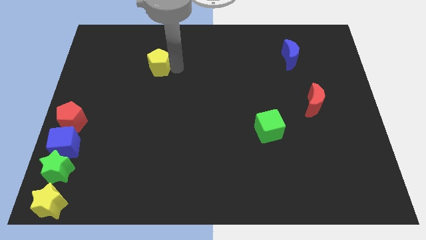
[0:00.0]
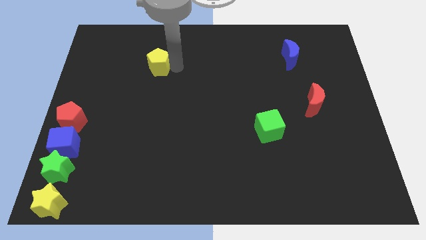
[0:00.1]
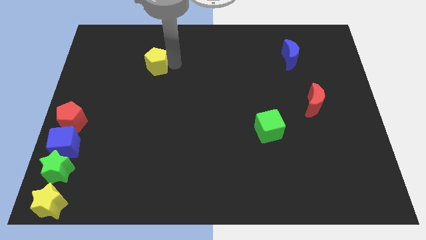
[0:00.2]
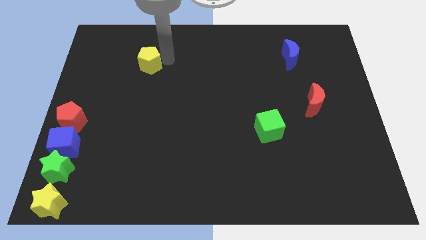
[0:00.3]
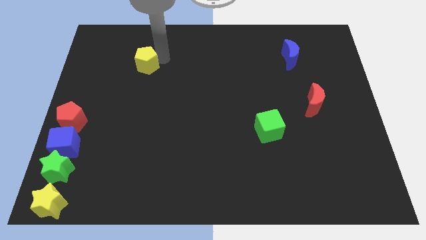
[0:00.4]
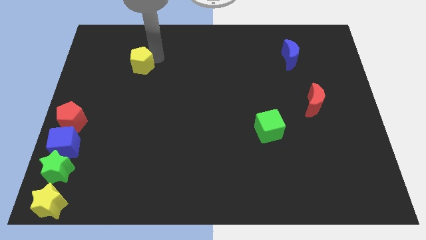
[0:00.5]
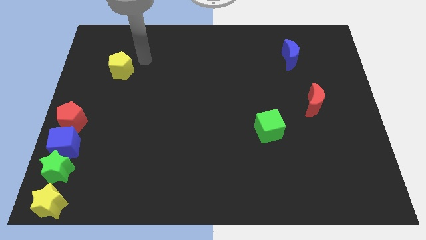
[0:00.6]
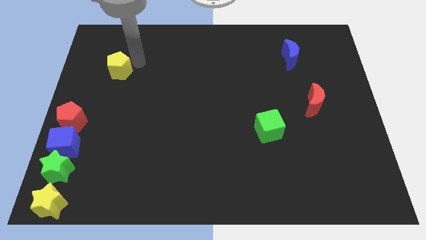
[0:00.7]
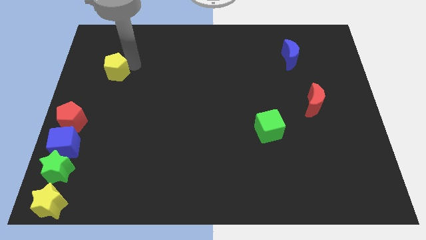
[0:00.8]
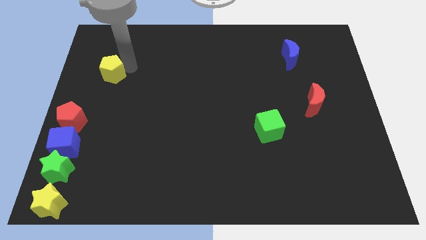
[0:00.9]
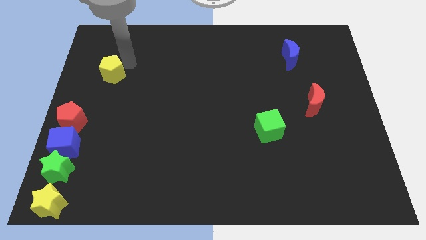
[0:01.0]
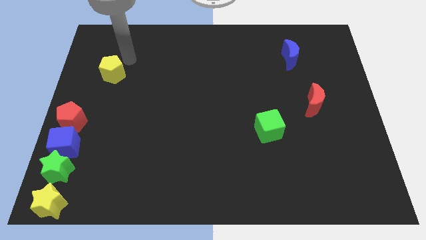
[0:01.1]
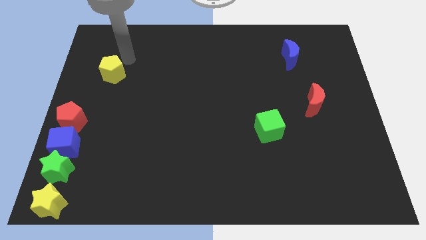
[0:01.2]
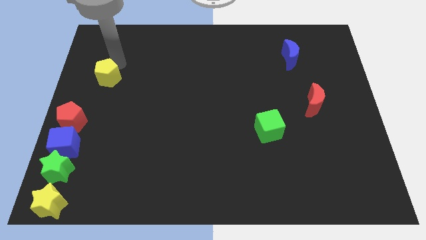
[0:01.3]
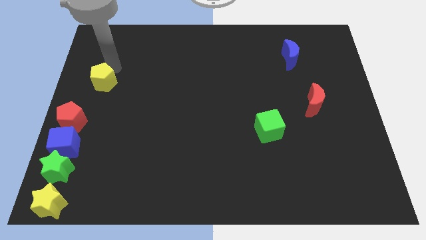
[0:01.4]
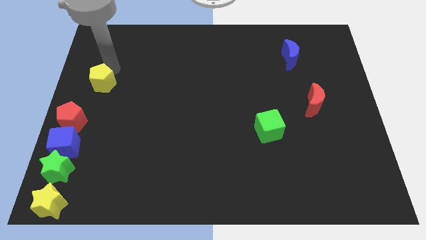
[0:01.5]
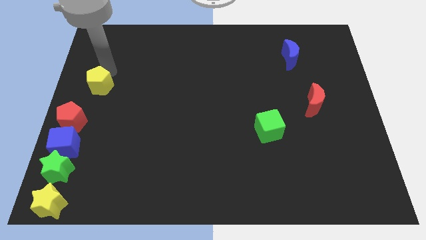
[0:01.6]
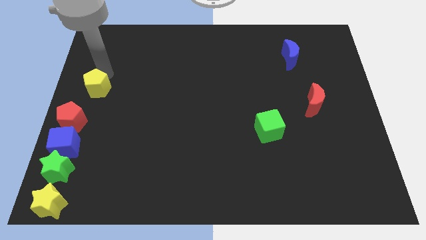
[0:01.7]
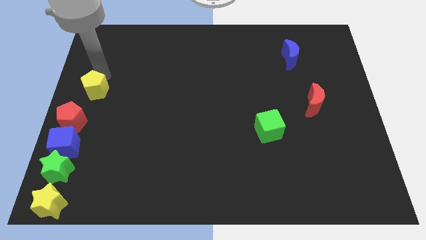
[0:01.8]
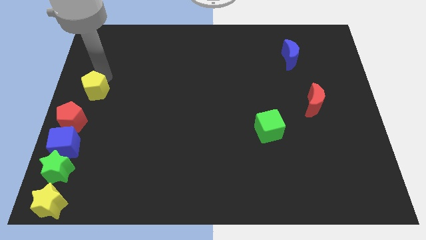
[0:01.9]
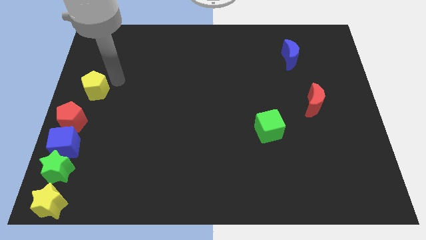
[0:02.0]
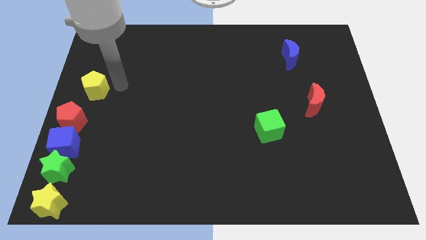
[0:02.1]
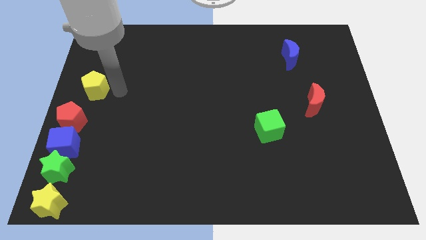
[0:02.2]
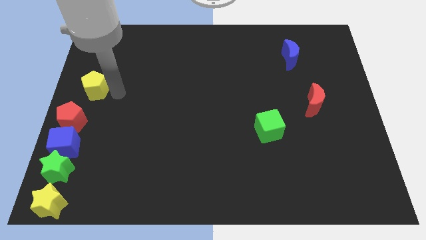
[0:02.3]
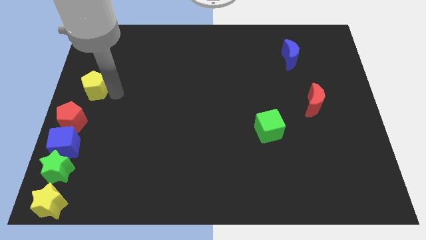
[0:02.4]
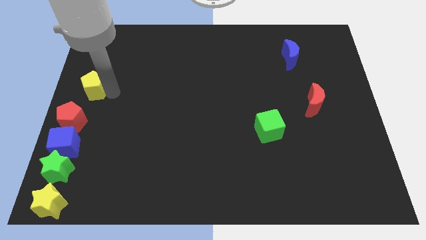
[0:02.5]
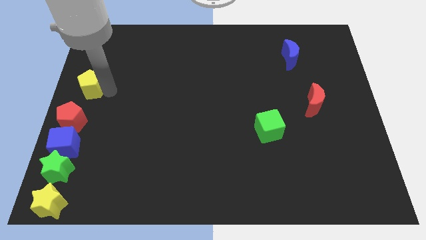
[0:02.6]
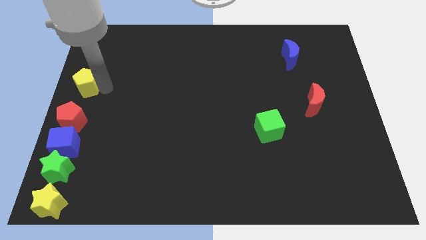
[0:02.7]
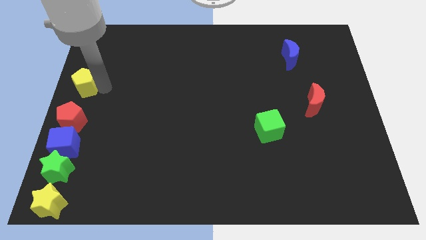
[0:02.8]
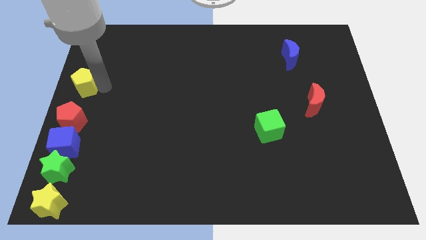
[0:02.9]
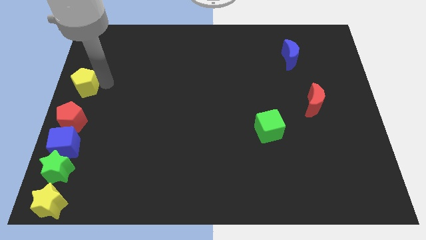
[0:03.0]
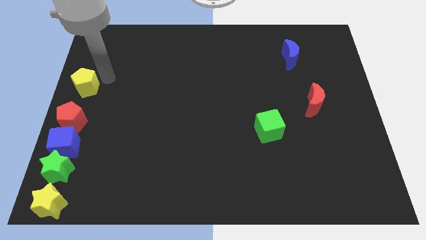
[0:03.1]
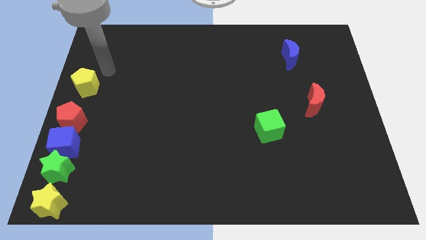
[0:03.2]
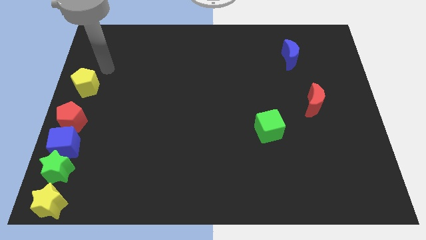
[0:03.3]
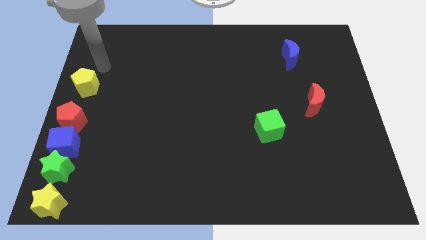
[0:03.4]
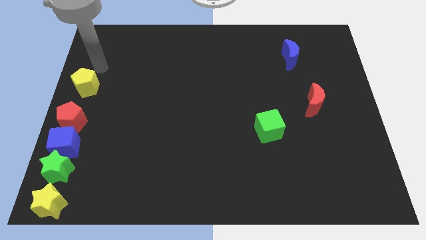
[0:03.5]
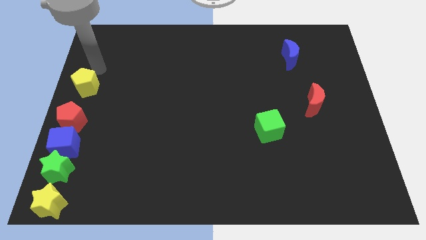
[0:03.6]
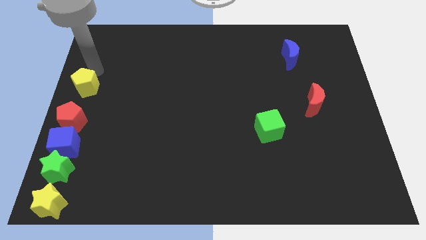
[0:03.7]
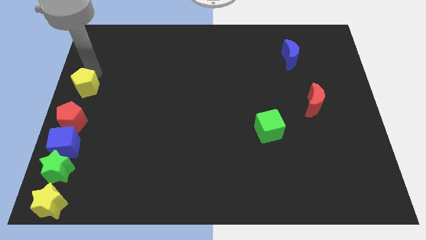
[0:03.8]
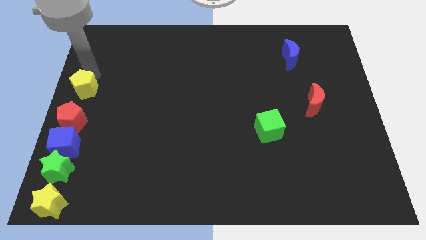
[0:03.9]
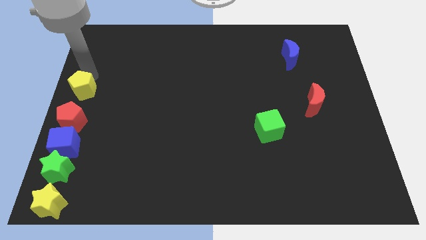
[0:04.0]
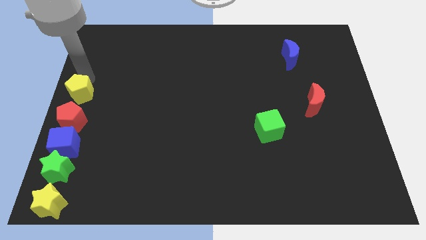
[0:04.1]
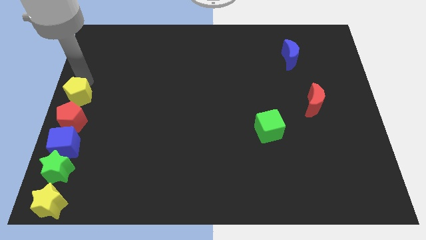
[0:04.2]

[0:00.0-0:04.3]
push the yellow pentagon to the top of the red pentagon

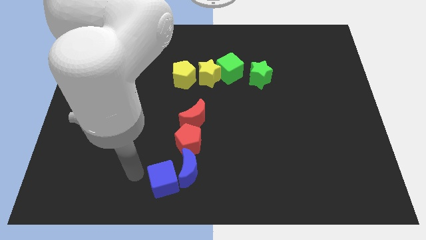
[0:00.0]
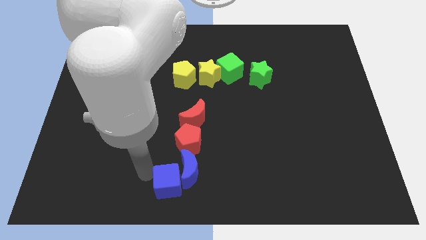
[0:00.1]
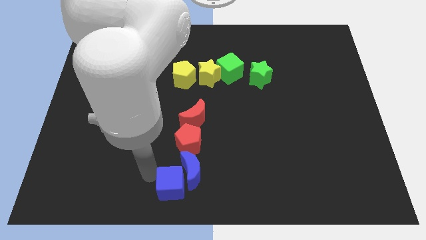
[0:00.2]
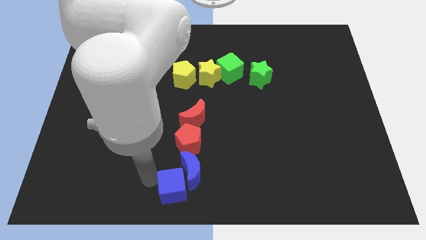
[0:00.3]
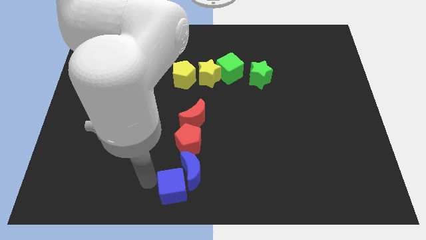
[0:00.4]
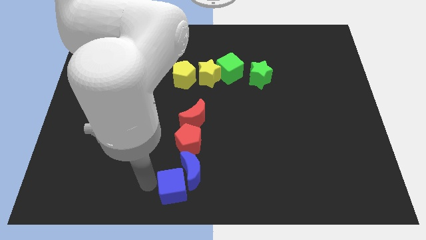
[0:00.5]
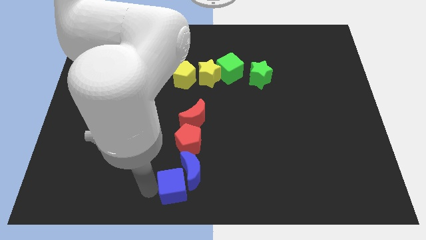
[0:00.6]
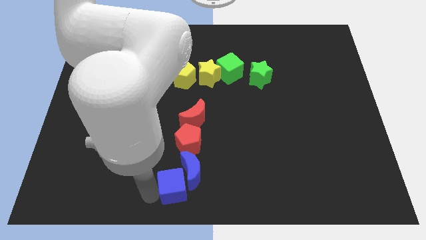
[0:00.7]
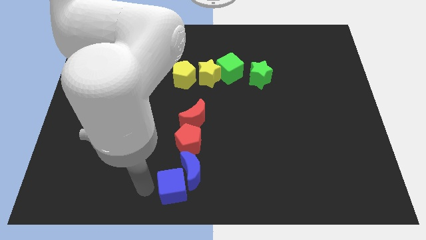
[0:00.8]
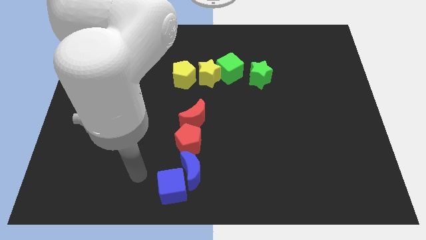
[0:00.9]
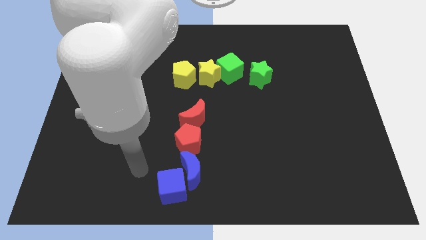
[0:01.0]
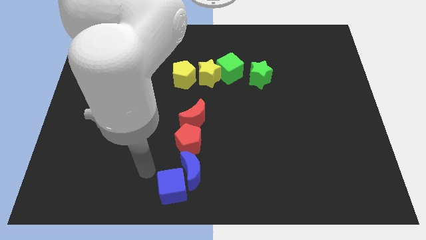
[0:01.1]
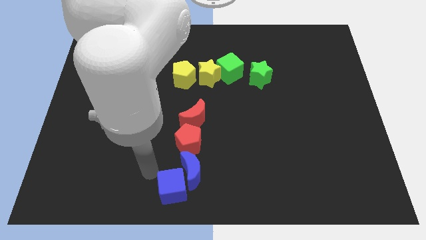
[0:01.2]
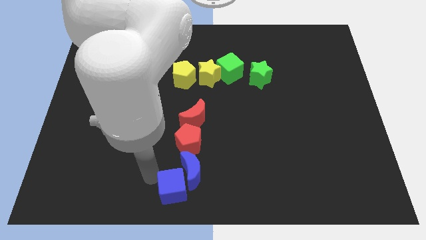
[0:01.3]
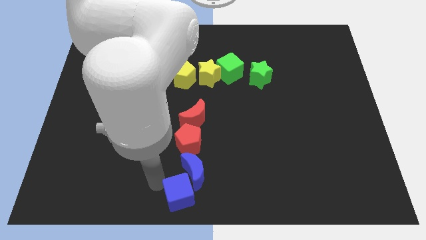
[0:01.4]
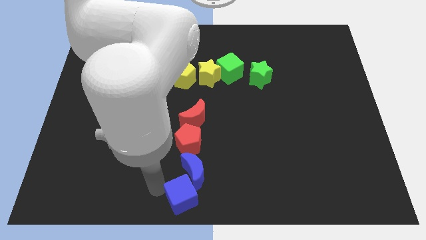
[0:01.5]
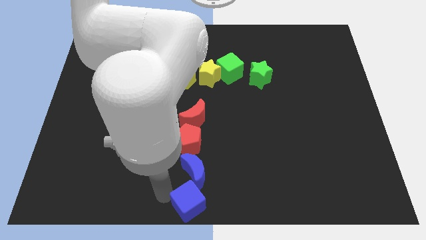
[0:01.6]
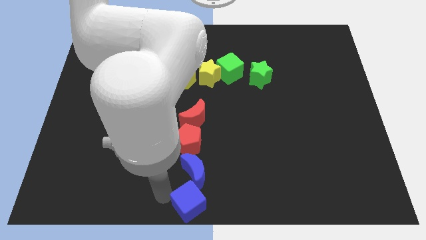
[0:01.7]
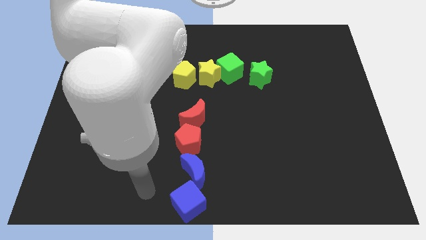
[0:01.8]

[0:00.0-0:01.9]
move the blue cube below the blue crescent

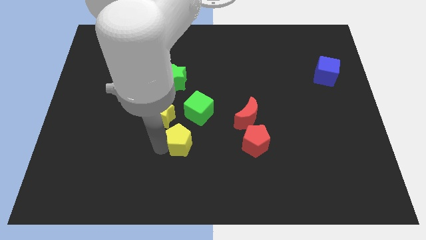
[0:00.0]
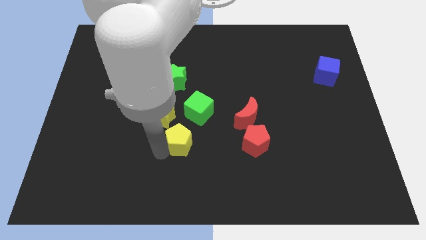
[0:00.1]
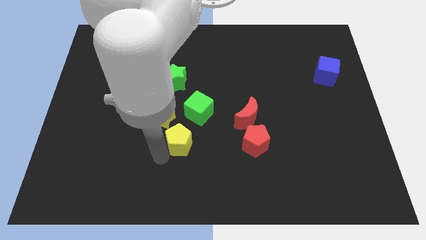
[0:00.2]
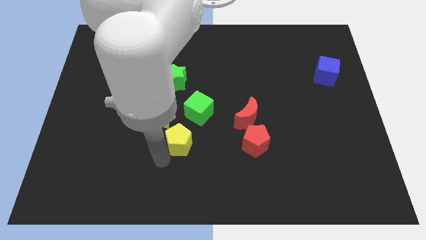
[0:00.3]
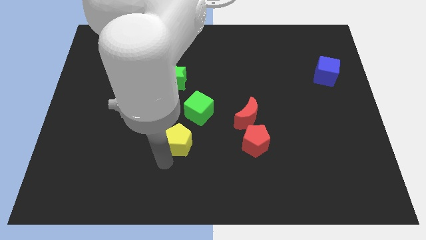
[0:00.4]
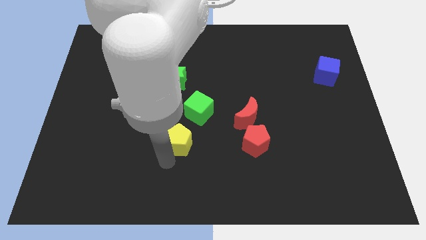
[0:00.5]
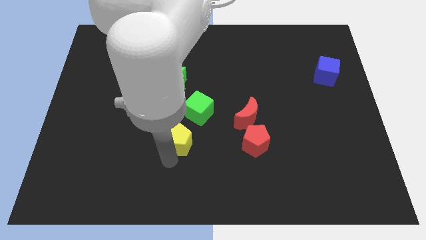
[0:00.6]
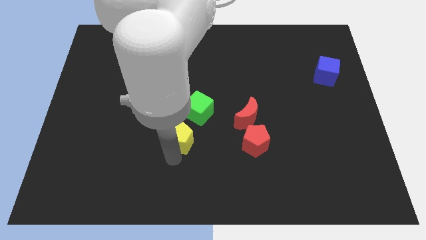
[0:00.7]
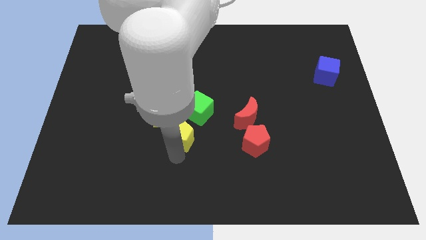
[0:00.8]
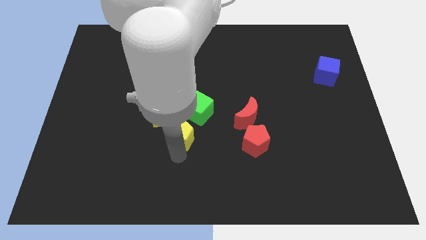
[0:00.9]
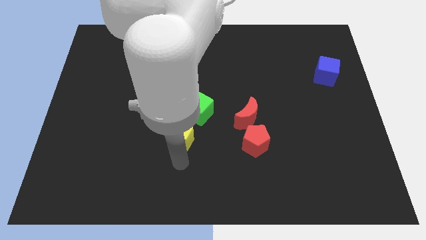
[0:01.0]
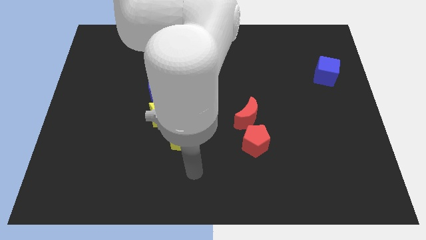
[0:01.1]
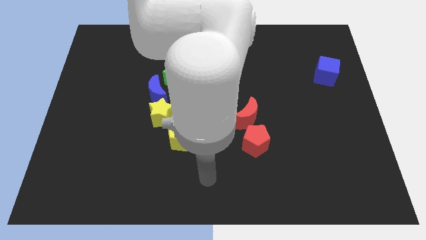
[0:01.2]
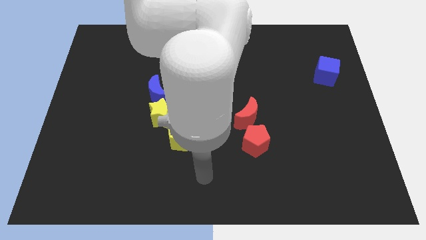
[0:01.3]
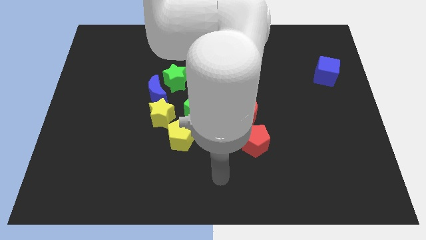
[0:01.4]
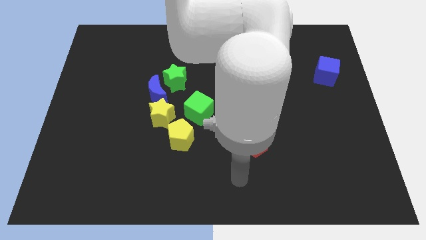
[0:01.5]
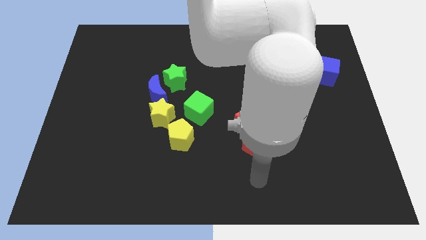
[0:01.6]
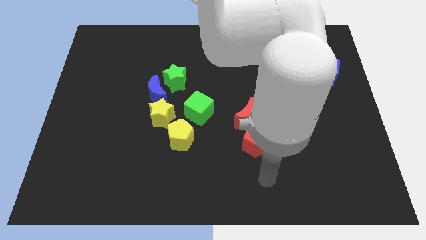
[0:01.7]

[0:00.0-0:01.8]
move your arm towards the red pentagon

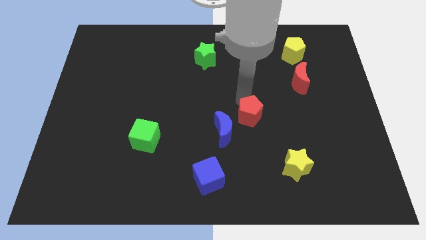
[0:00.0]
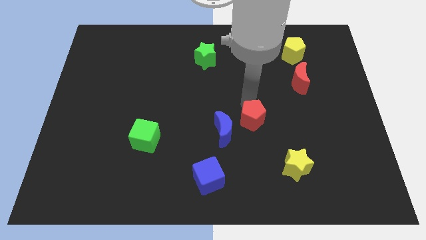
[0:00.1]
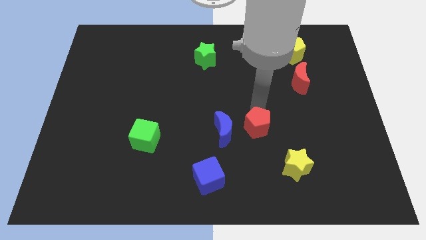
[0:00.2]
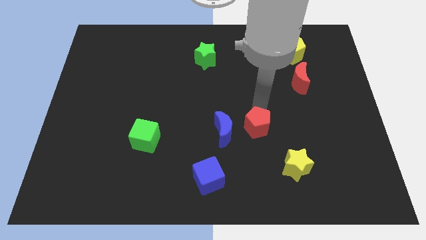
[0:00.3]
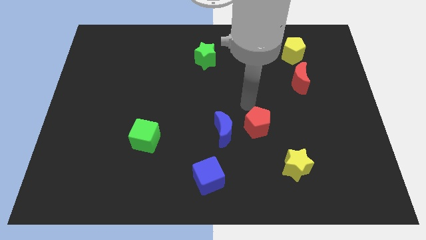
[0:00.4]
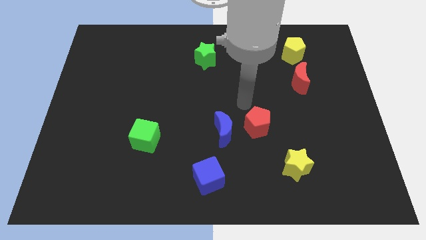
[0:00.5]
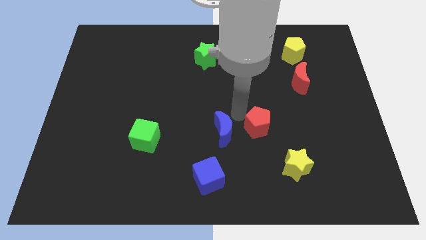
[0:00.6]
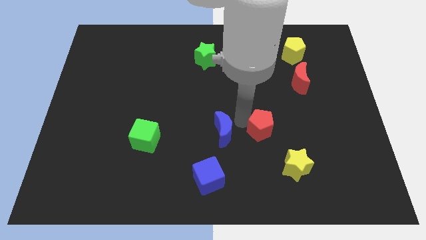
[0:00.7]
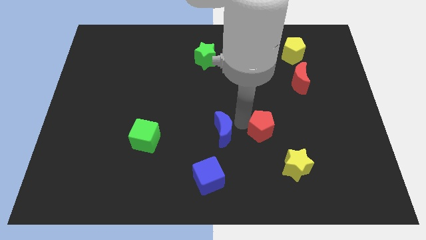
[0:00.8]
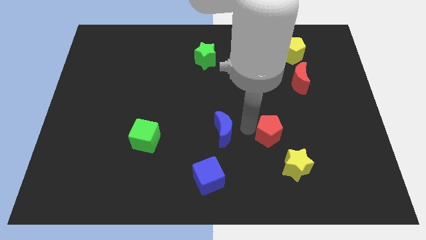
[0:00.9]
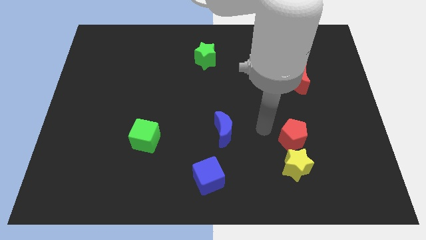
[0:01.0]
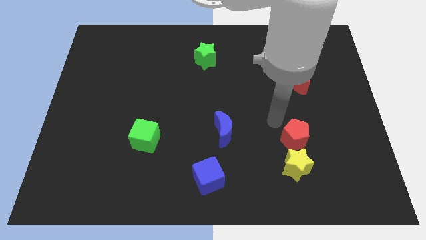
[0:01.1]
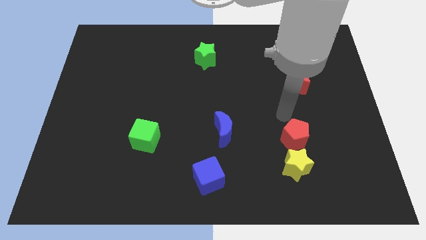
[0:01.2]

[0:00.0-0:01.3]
push the red pentagon to the top side of the yellow star
